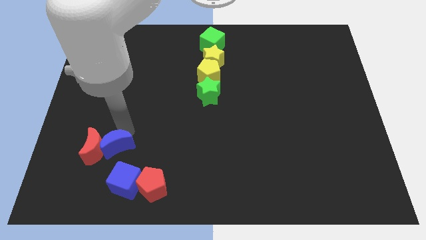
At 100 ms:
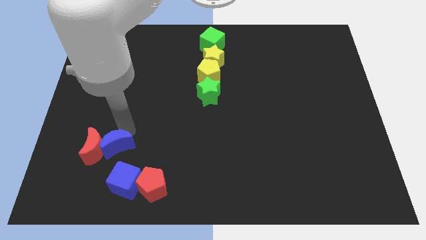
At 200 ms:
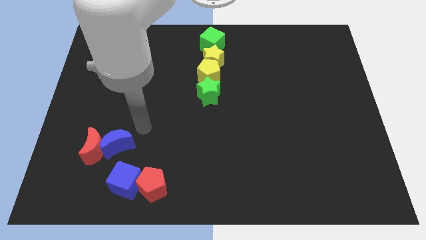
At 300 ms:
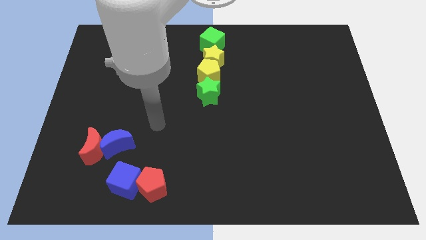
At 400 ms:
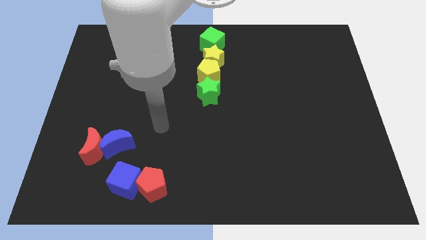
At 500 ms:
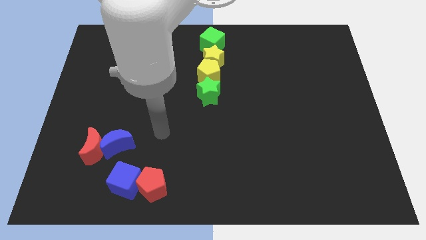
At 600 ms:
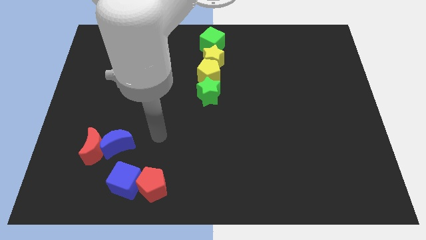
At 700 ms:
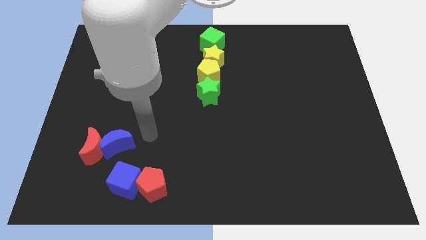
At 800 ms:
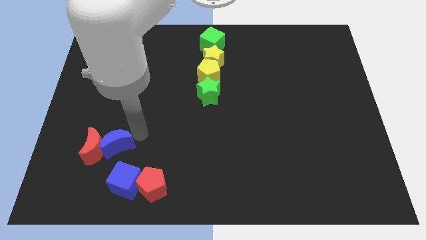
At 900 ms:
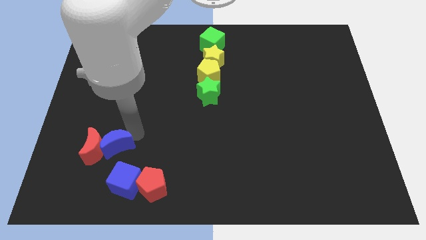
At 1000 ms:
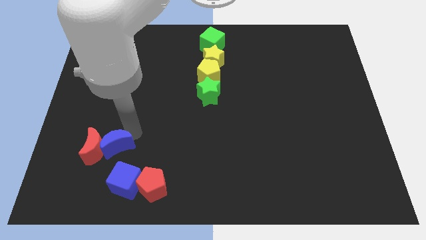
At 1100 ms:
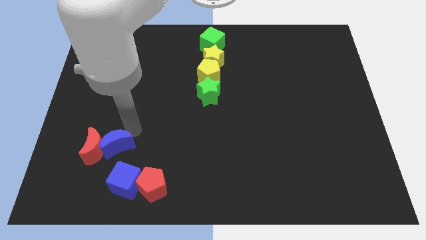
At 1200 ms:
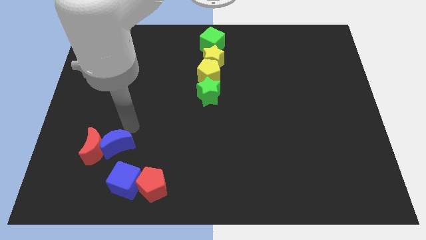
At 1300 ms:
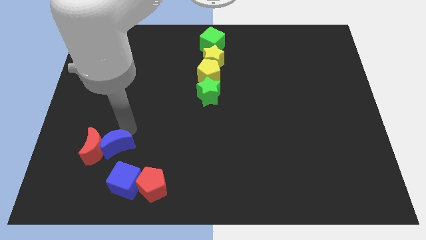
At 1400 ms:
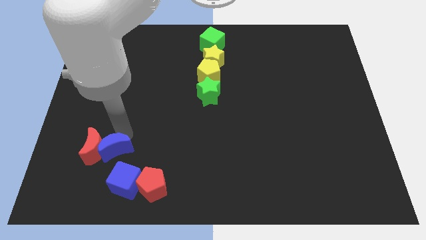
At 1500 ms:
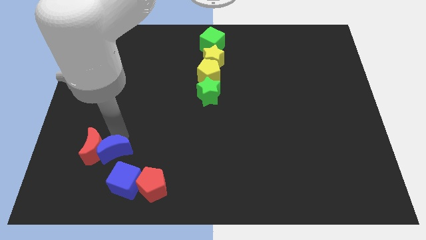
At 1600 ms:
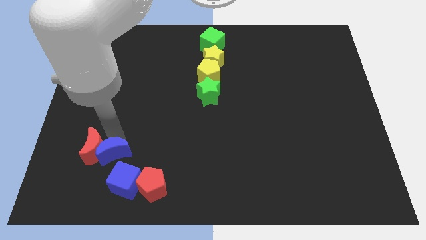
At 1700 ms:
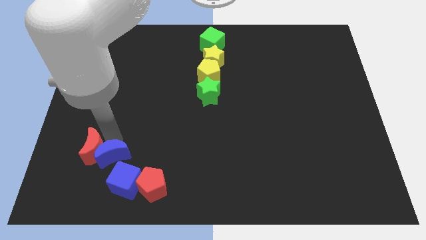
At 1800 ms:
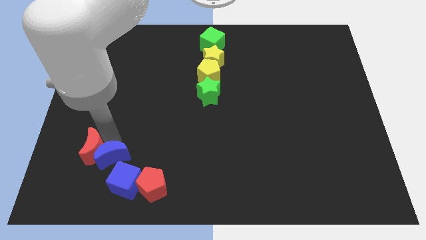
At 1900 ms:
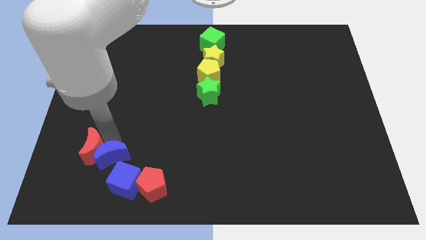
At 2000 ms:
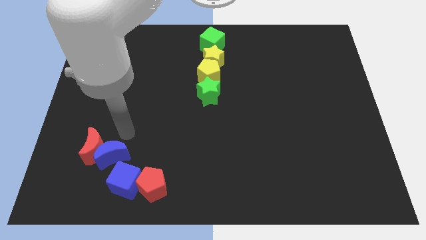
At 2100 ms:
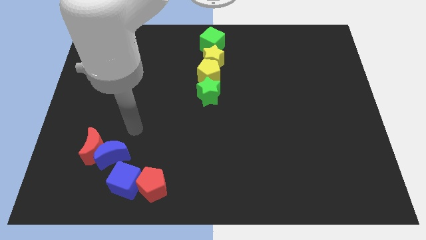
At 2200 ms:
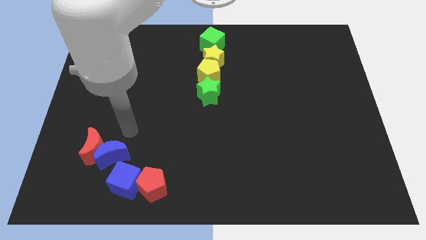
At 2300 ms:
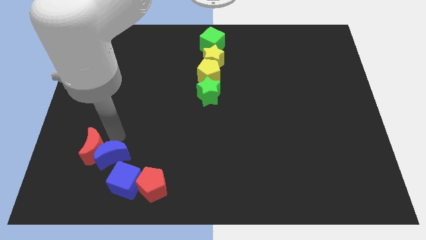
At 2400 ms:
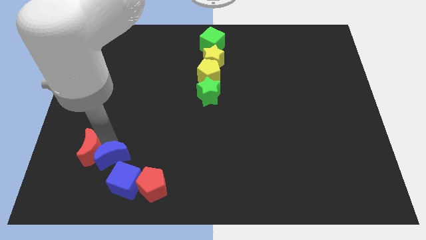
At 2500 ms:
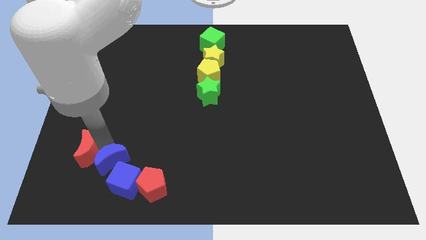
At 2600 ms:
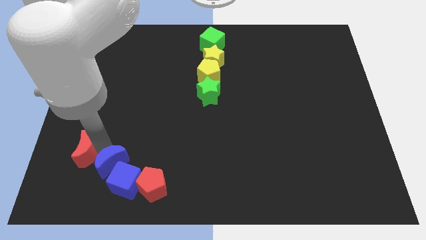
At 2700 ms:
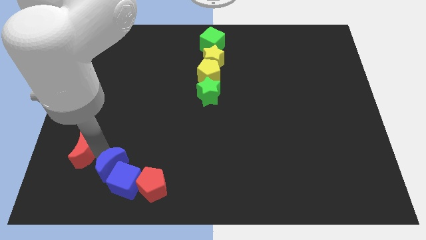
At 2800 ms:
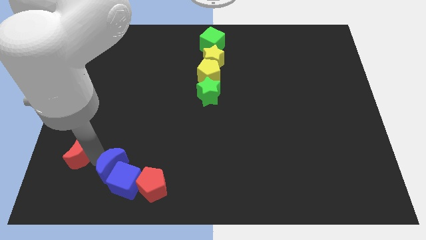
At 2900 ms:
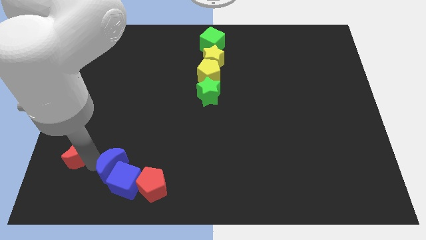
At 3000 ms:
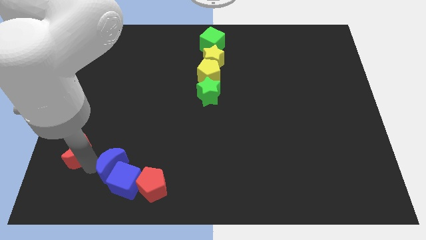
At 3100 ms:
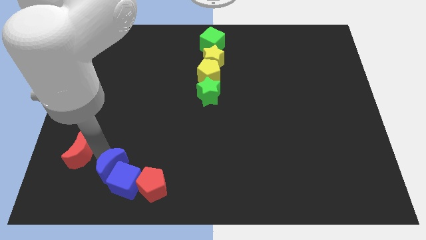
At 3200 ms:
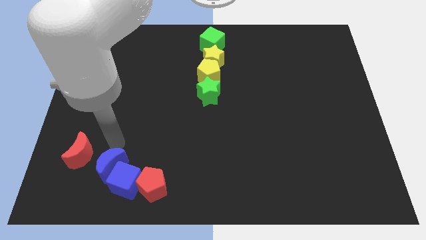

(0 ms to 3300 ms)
push the blue crescent in between blue cube and red crescent

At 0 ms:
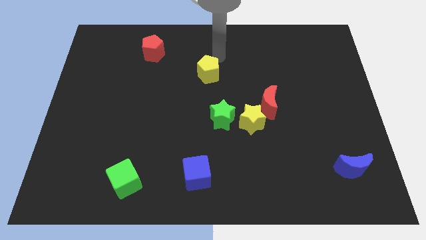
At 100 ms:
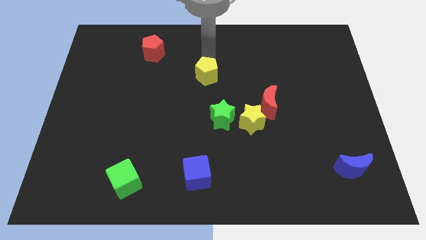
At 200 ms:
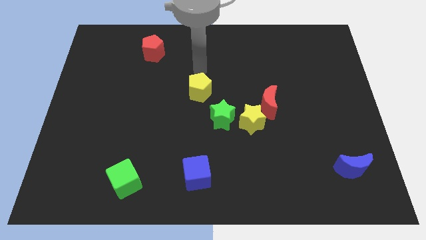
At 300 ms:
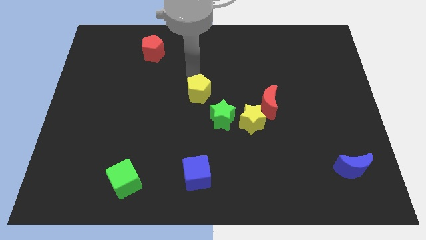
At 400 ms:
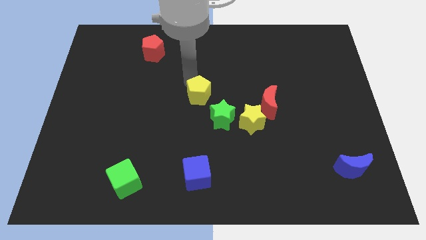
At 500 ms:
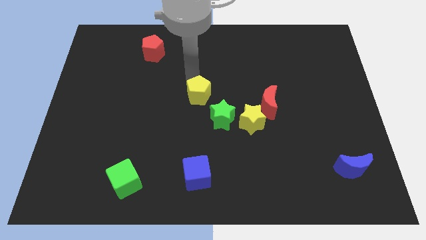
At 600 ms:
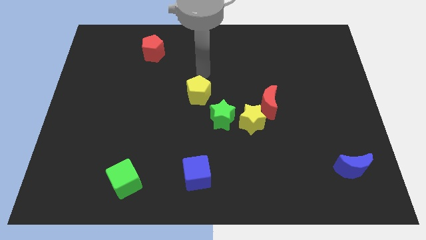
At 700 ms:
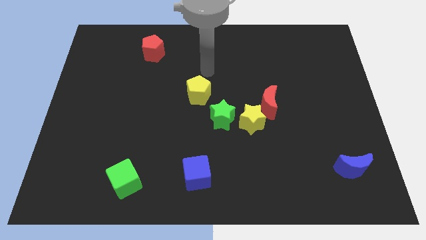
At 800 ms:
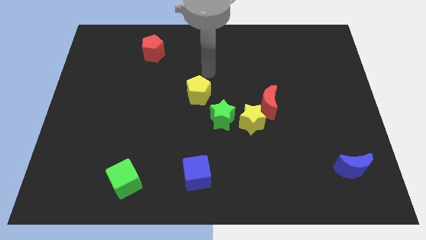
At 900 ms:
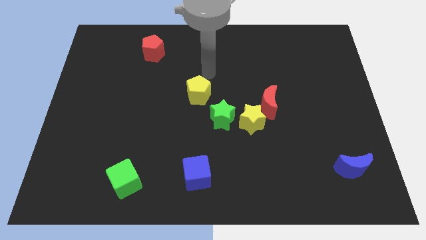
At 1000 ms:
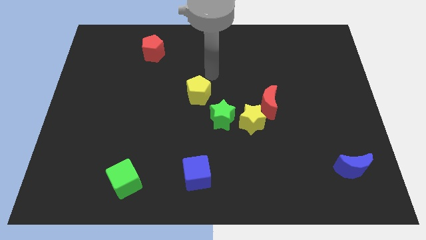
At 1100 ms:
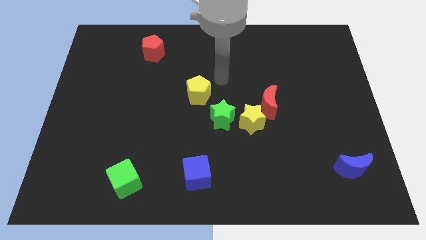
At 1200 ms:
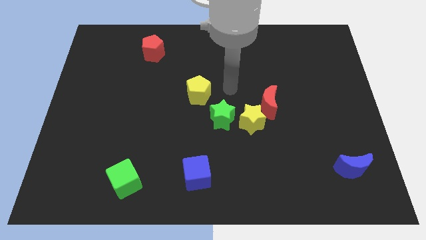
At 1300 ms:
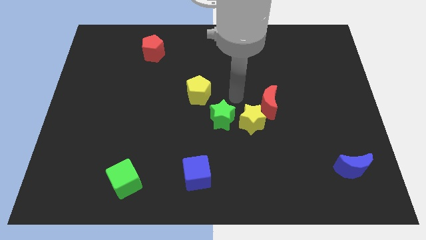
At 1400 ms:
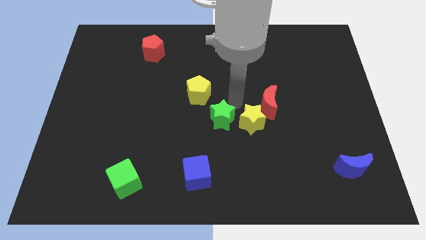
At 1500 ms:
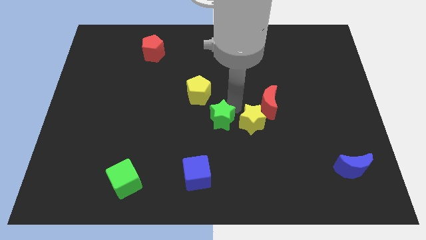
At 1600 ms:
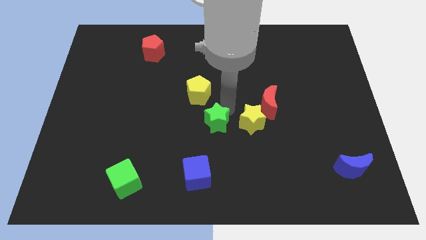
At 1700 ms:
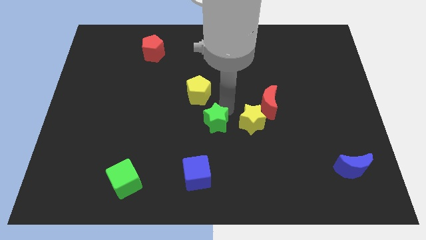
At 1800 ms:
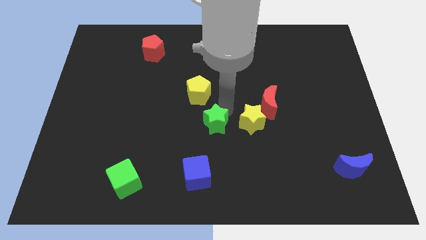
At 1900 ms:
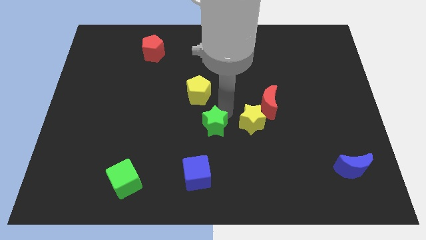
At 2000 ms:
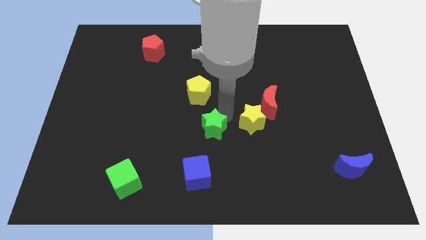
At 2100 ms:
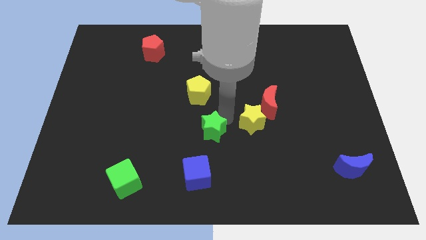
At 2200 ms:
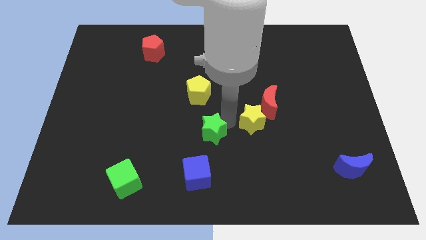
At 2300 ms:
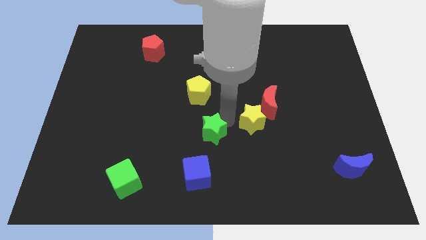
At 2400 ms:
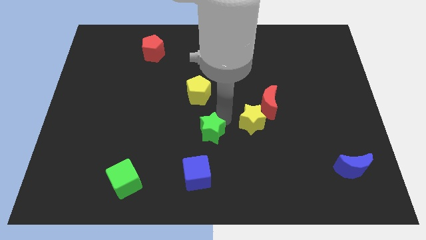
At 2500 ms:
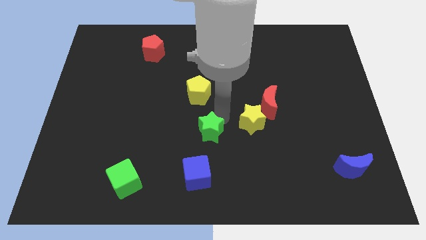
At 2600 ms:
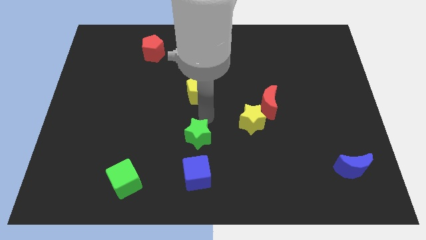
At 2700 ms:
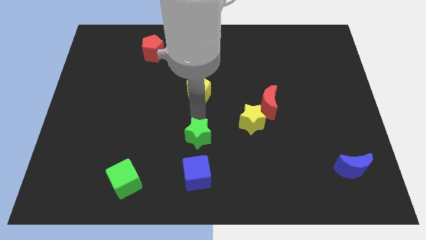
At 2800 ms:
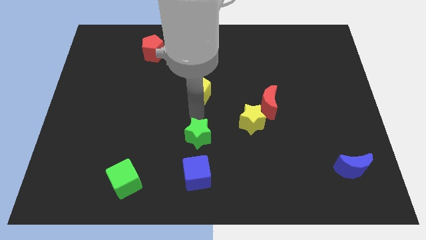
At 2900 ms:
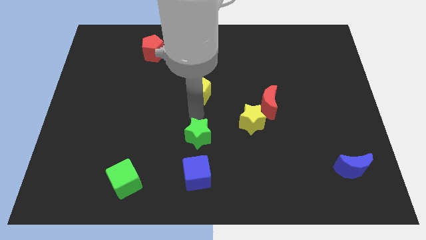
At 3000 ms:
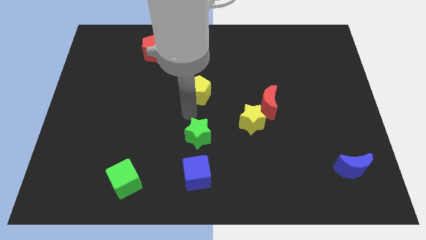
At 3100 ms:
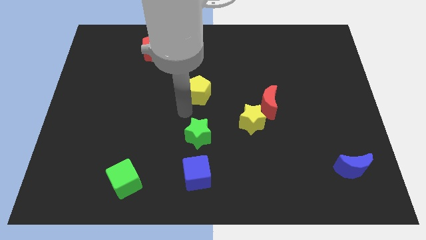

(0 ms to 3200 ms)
move the green star vertical to yellow pentagon

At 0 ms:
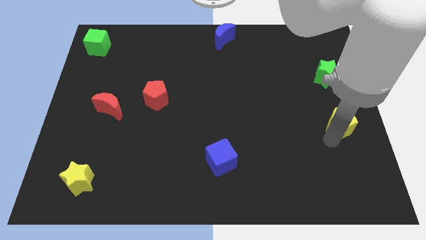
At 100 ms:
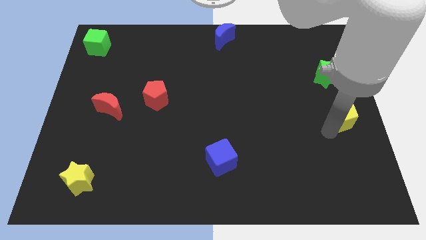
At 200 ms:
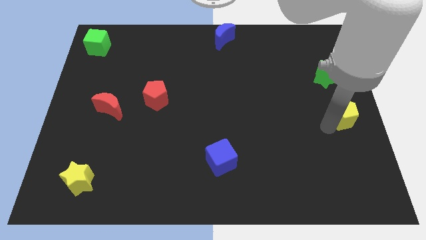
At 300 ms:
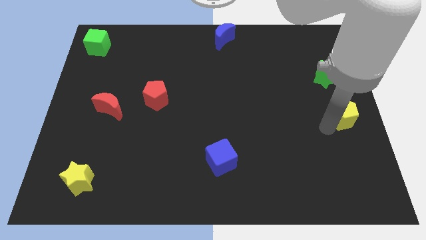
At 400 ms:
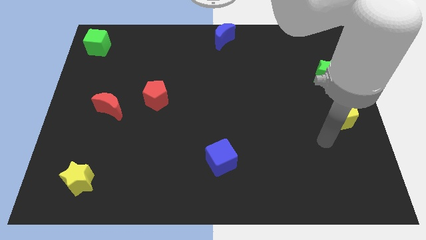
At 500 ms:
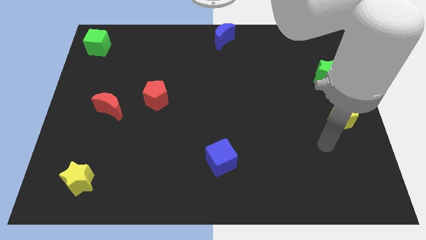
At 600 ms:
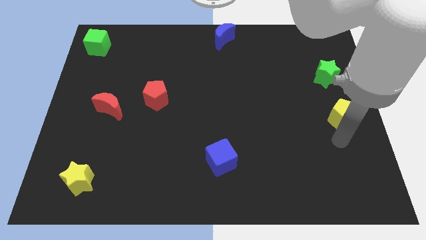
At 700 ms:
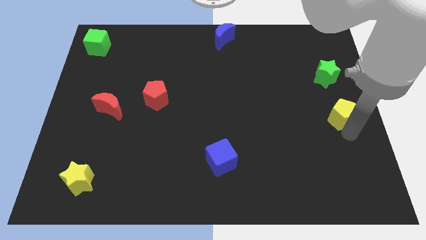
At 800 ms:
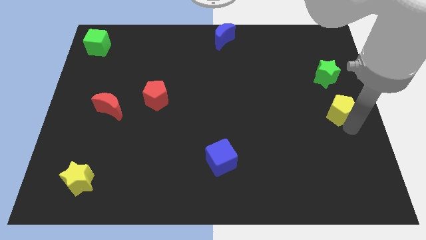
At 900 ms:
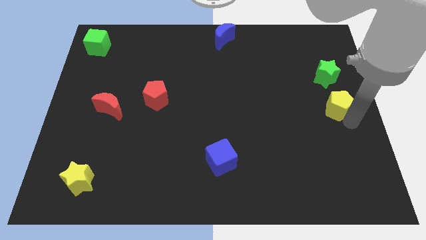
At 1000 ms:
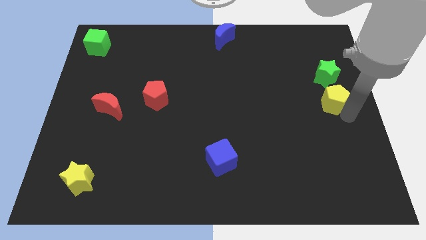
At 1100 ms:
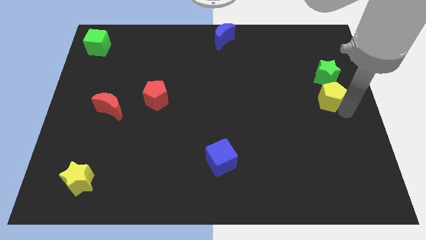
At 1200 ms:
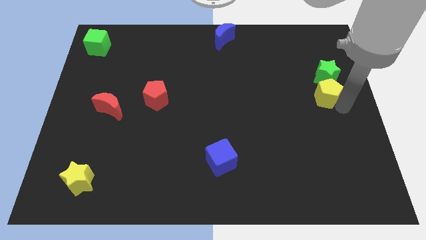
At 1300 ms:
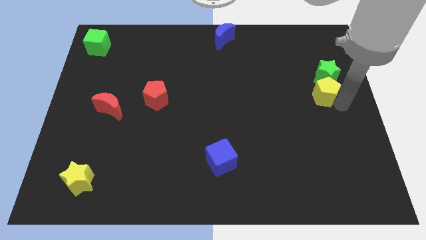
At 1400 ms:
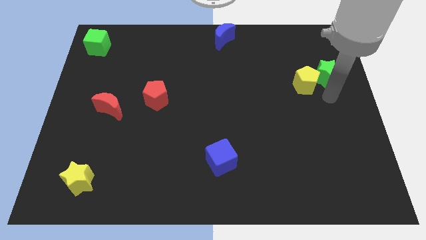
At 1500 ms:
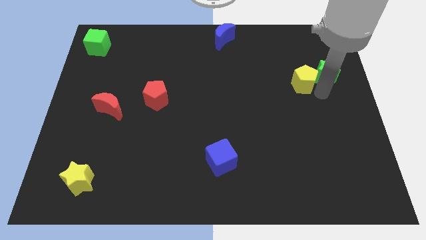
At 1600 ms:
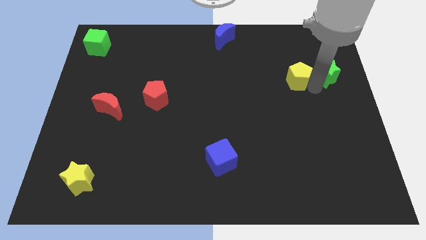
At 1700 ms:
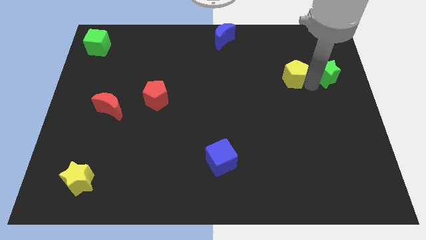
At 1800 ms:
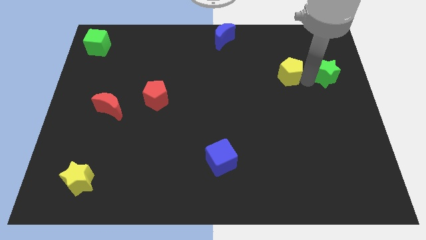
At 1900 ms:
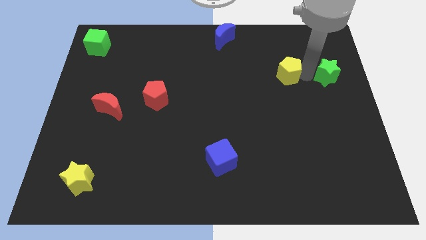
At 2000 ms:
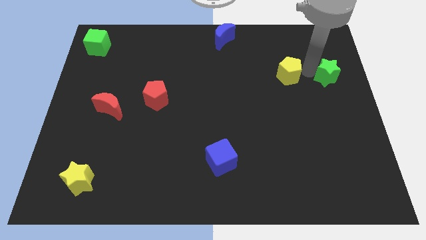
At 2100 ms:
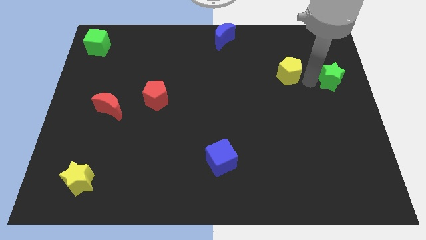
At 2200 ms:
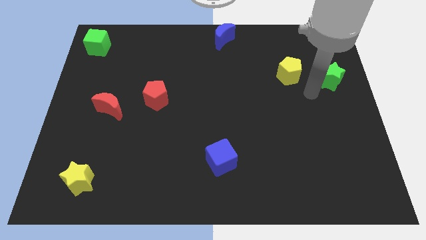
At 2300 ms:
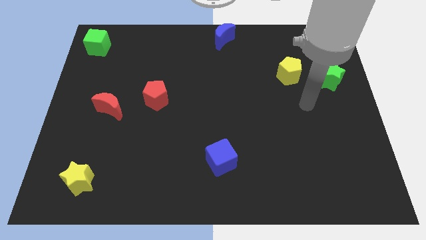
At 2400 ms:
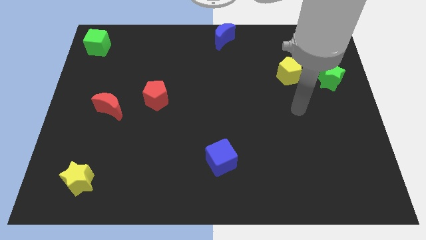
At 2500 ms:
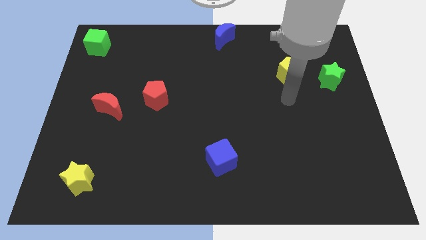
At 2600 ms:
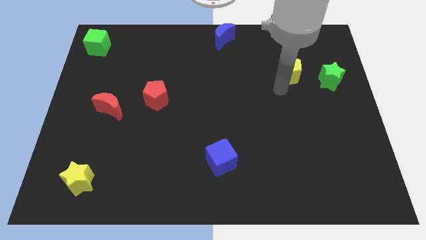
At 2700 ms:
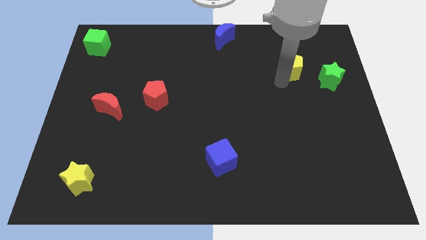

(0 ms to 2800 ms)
place yellow pentagon parallel to green star
